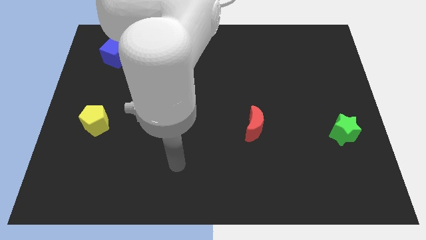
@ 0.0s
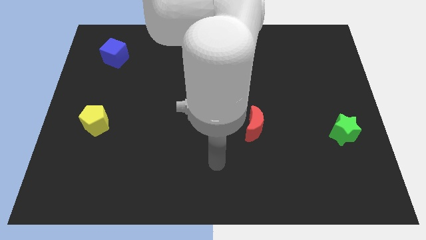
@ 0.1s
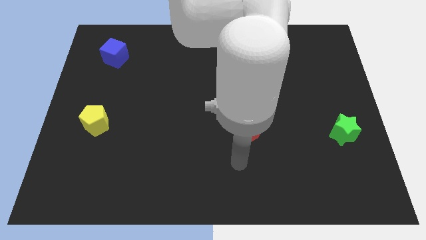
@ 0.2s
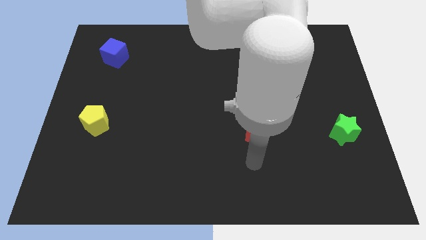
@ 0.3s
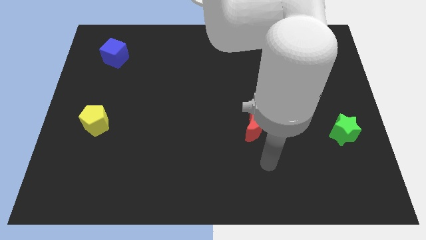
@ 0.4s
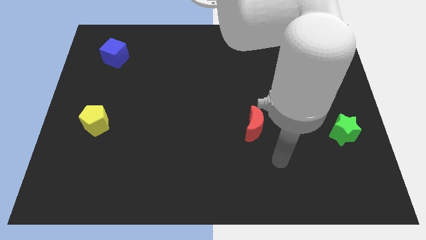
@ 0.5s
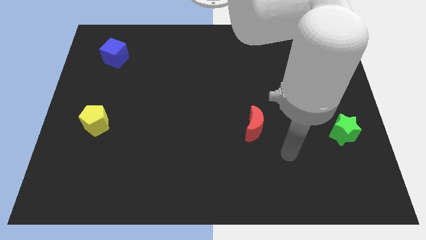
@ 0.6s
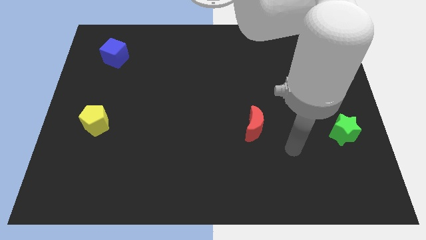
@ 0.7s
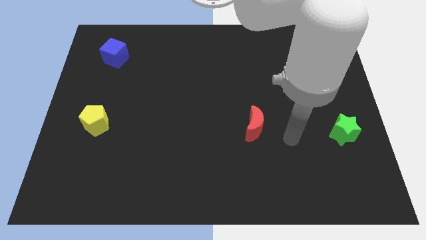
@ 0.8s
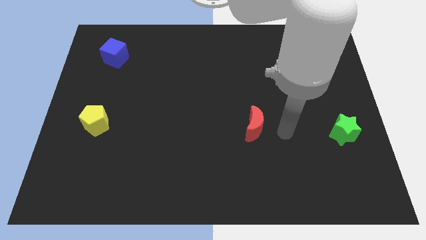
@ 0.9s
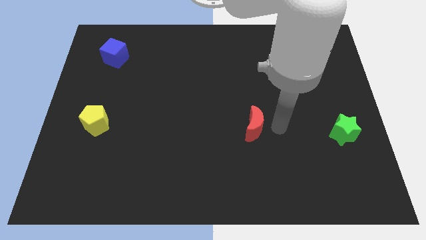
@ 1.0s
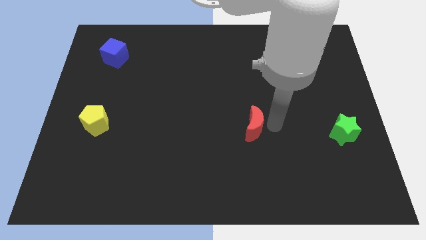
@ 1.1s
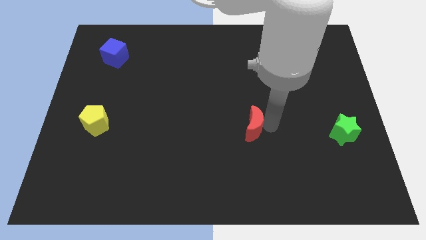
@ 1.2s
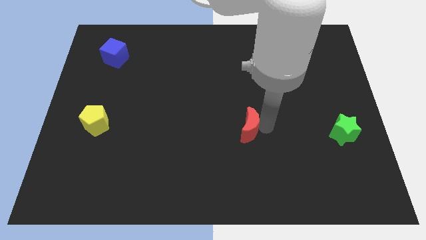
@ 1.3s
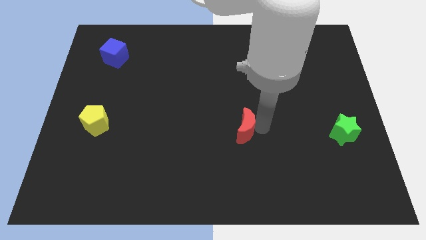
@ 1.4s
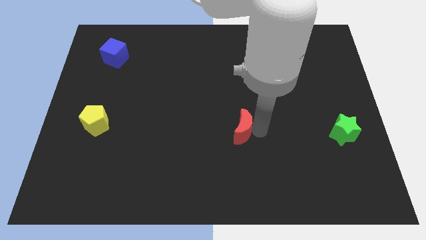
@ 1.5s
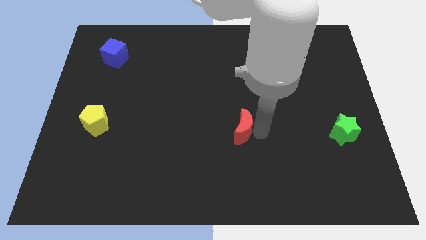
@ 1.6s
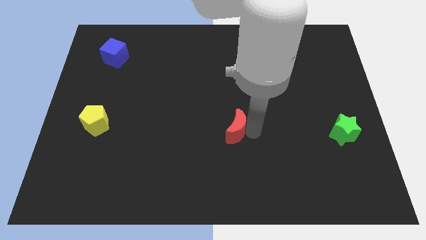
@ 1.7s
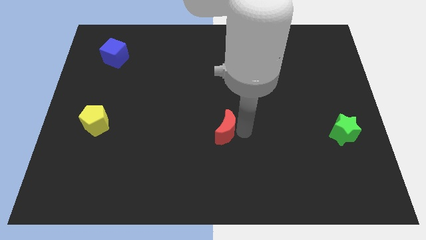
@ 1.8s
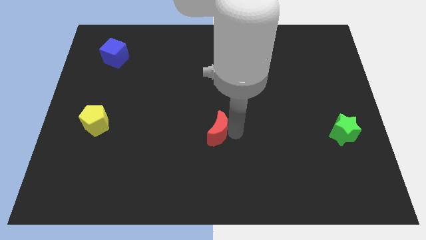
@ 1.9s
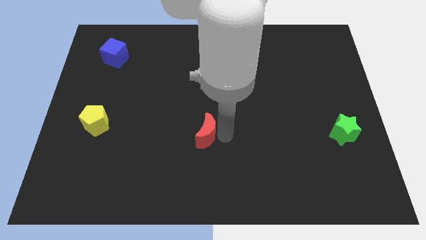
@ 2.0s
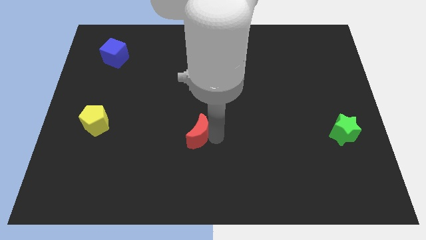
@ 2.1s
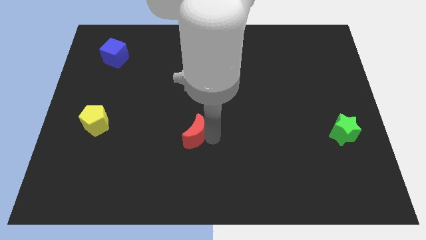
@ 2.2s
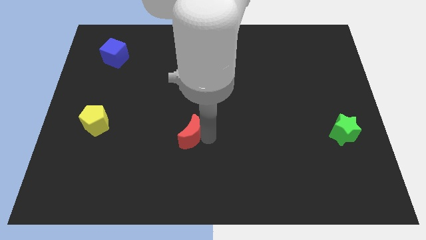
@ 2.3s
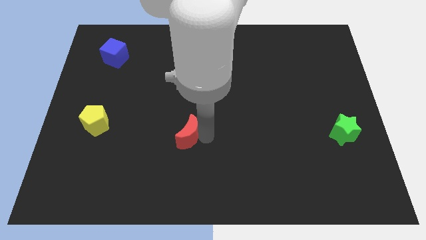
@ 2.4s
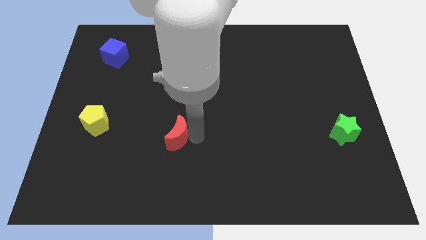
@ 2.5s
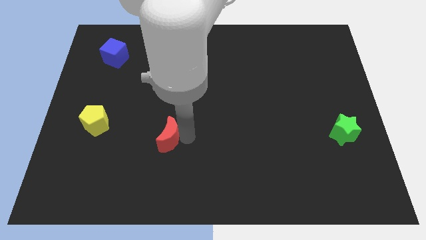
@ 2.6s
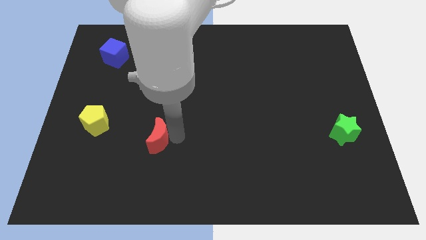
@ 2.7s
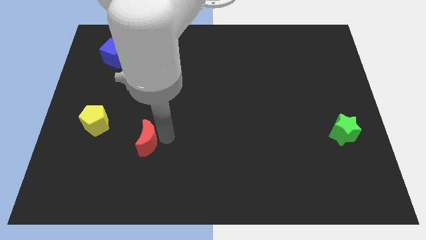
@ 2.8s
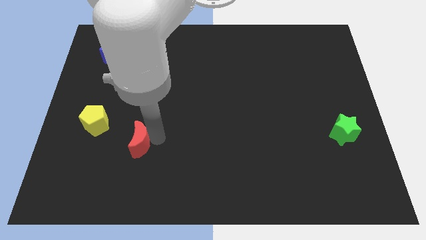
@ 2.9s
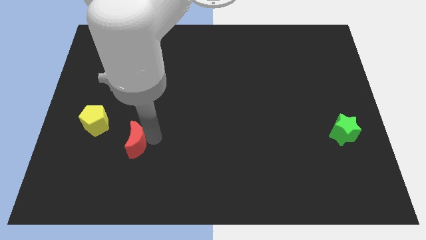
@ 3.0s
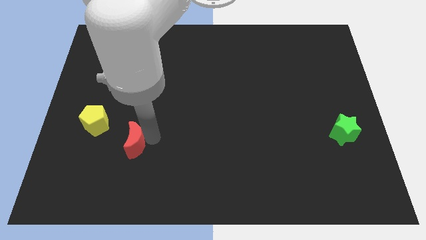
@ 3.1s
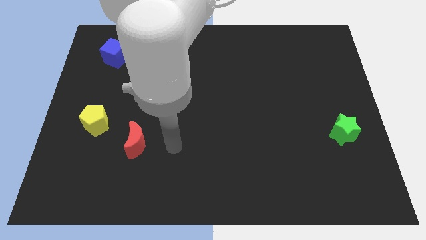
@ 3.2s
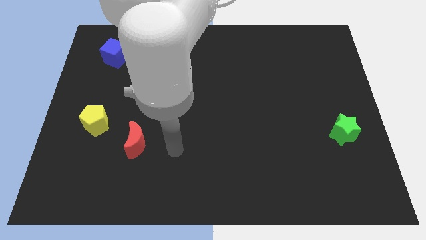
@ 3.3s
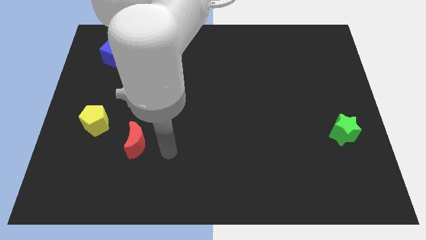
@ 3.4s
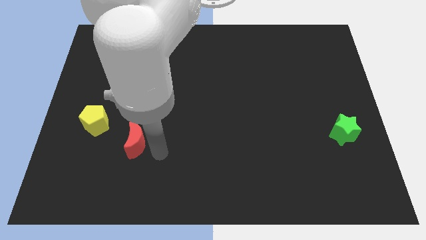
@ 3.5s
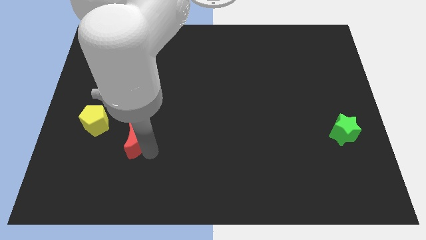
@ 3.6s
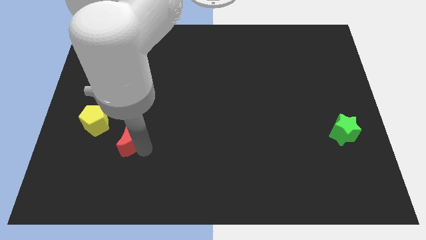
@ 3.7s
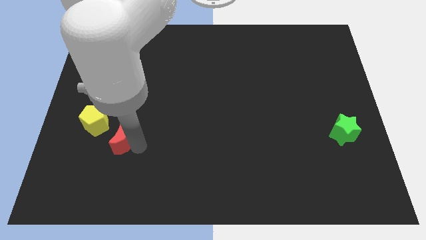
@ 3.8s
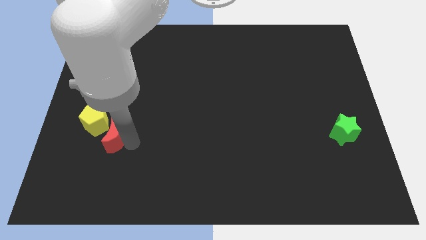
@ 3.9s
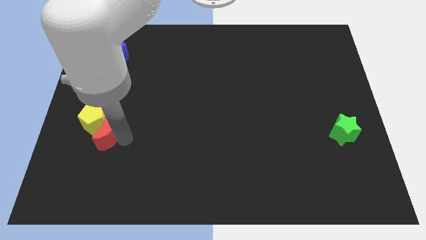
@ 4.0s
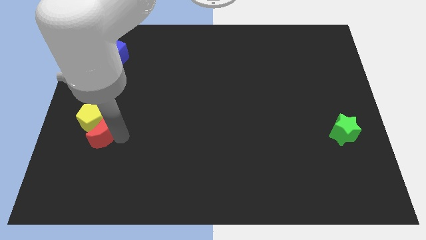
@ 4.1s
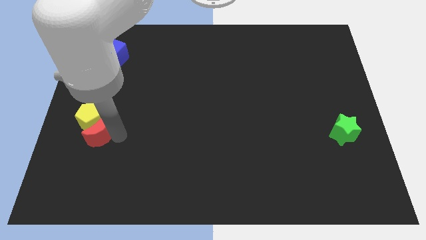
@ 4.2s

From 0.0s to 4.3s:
slide the red block towards the pentagon

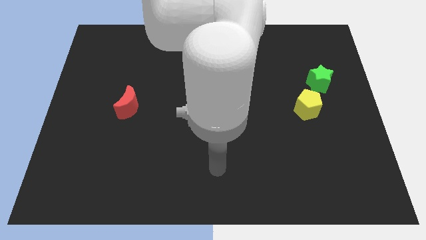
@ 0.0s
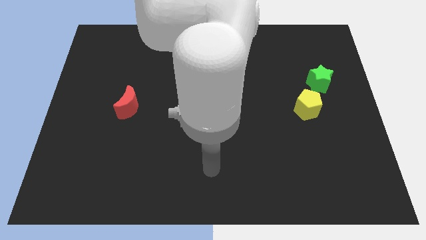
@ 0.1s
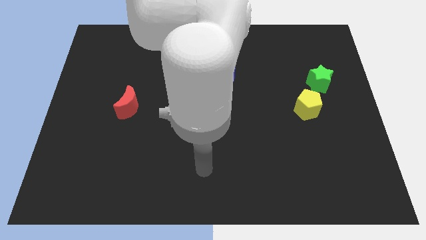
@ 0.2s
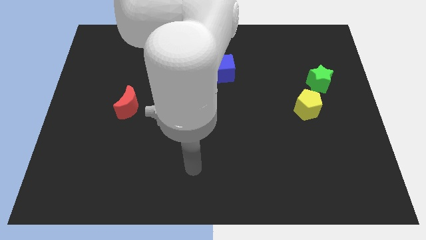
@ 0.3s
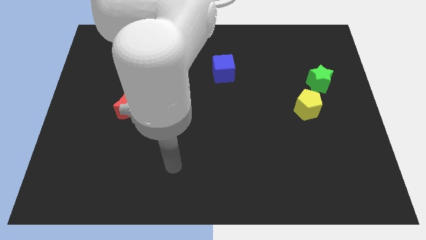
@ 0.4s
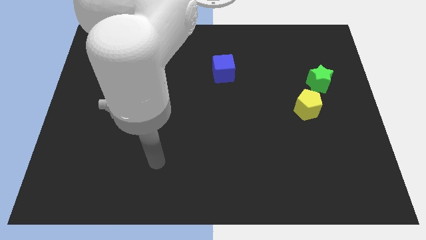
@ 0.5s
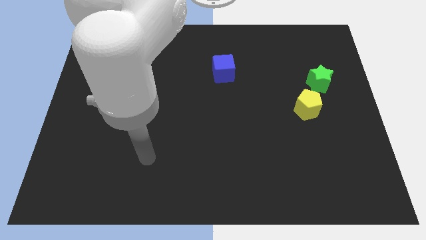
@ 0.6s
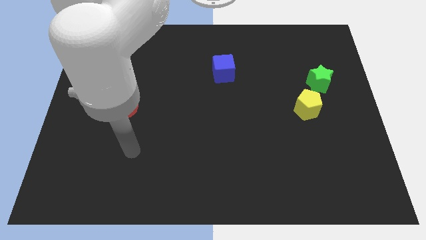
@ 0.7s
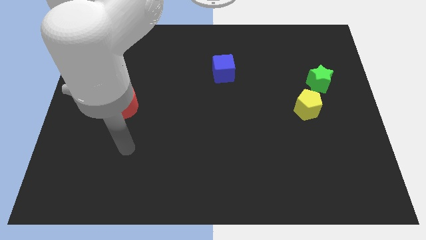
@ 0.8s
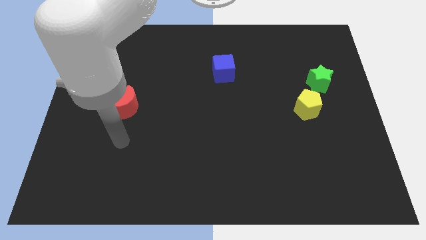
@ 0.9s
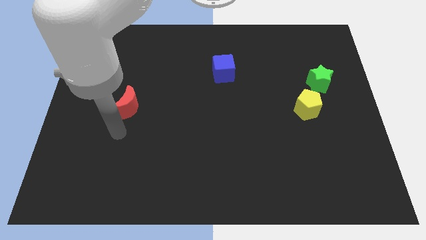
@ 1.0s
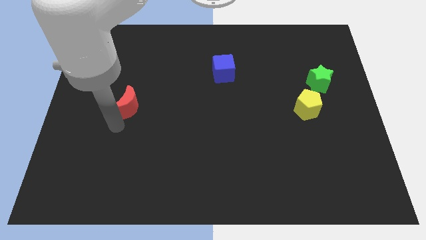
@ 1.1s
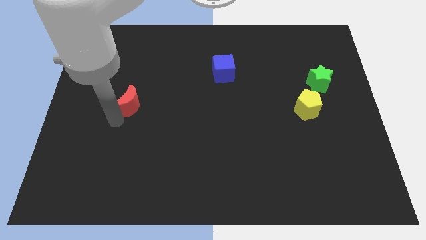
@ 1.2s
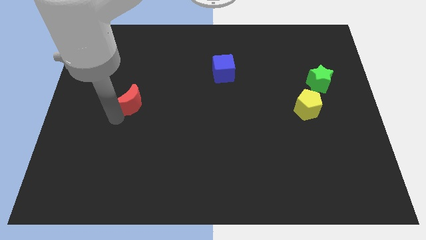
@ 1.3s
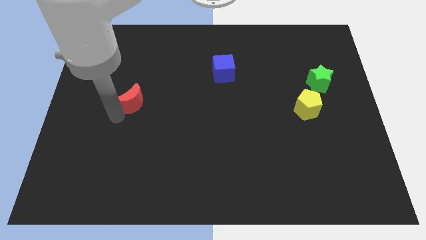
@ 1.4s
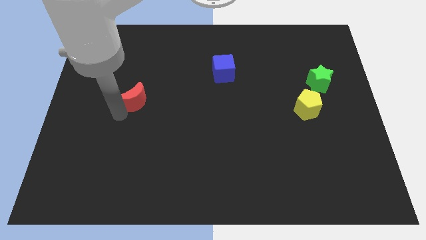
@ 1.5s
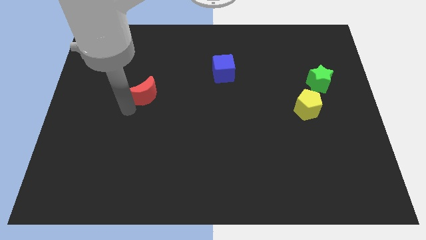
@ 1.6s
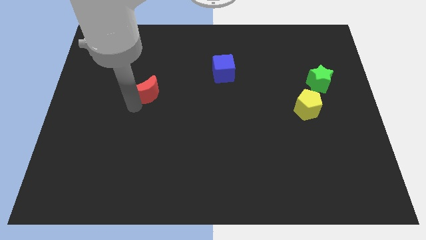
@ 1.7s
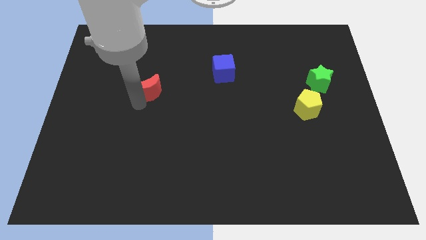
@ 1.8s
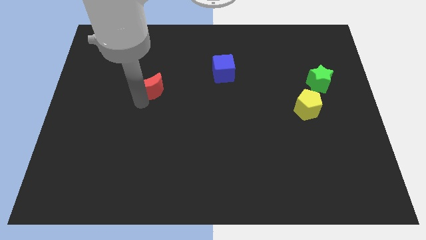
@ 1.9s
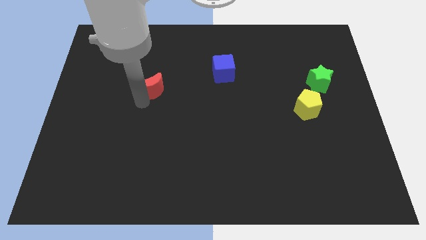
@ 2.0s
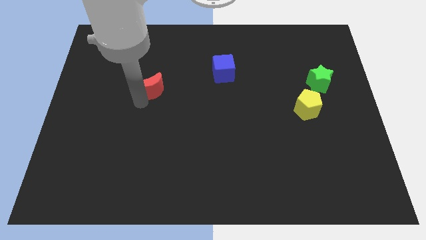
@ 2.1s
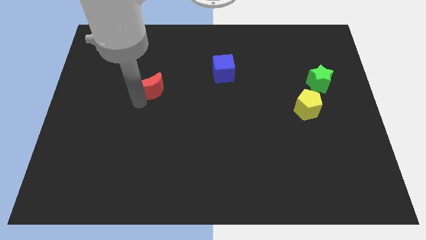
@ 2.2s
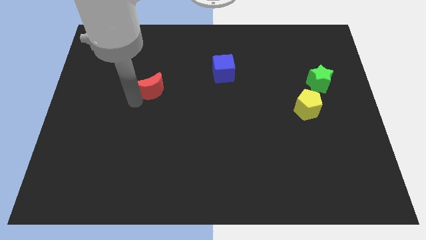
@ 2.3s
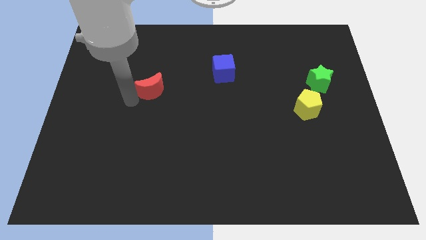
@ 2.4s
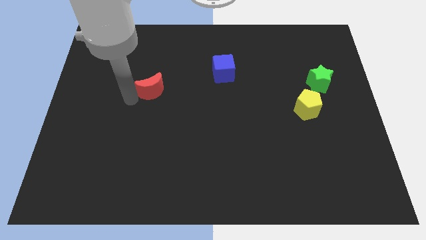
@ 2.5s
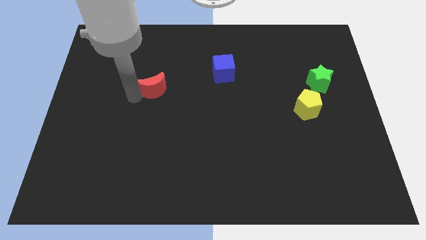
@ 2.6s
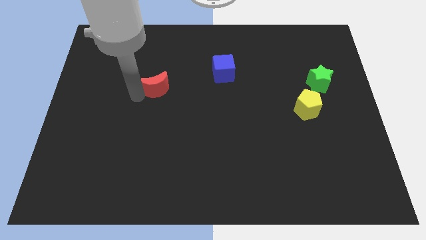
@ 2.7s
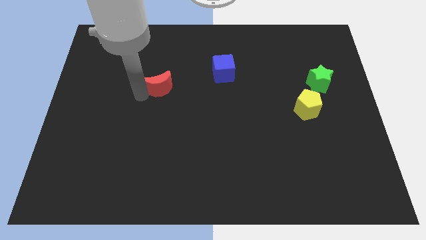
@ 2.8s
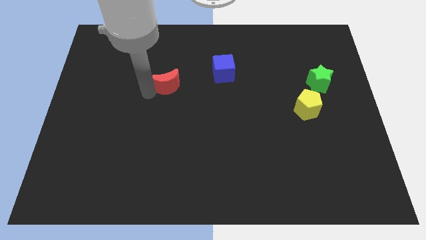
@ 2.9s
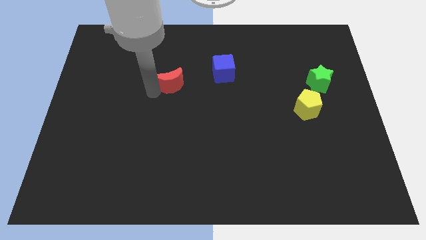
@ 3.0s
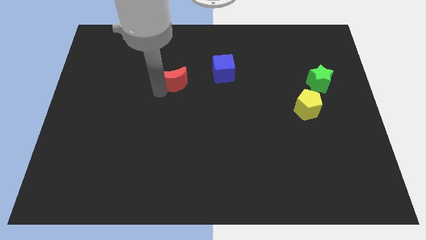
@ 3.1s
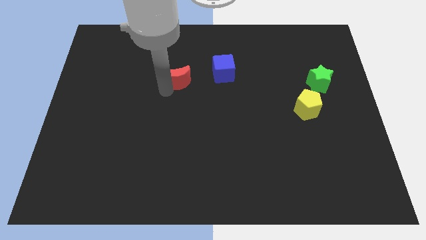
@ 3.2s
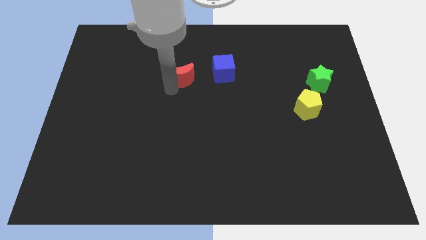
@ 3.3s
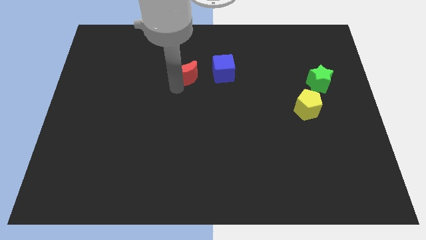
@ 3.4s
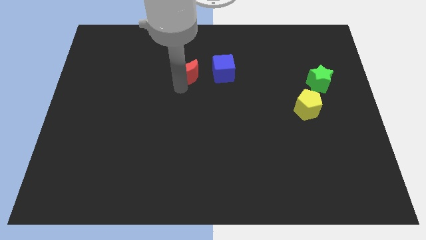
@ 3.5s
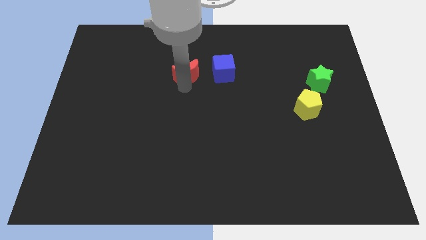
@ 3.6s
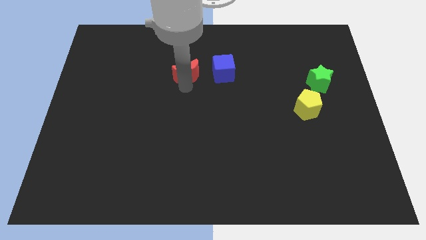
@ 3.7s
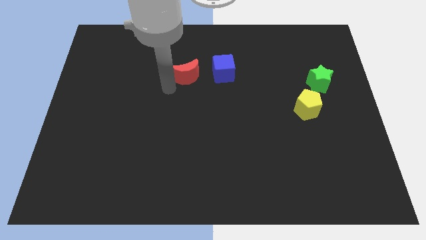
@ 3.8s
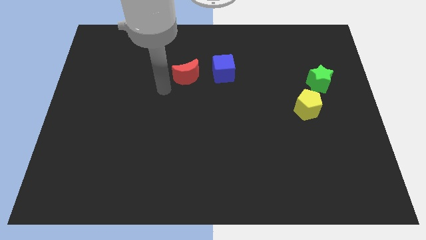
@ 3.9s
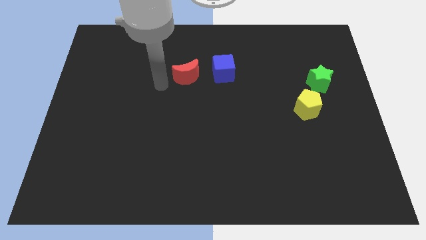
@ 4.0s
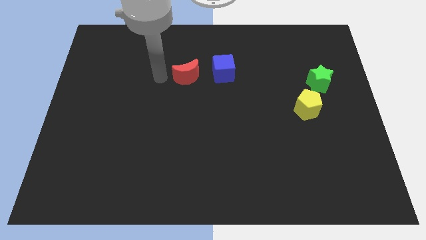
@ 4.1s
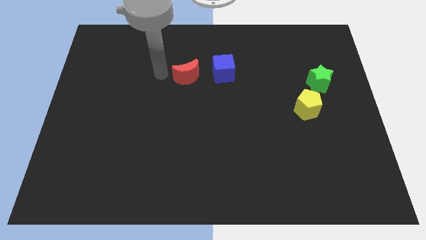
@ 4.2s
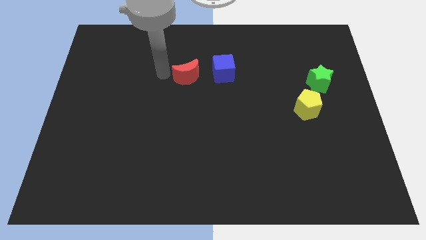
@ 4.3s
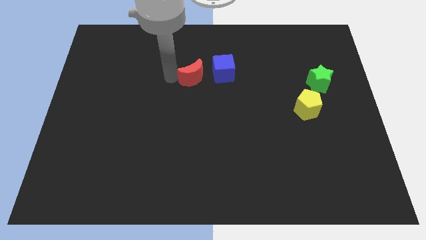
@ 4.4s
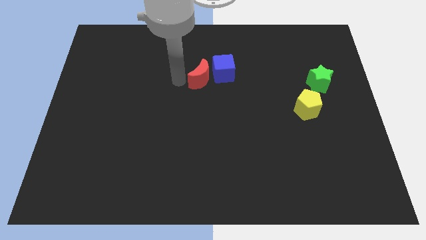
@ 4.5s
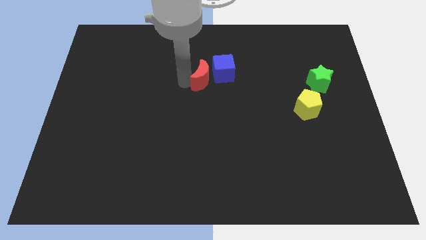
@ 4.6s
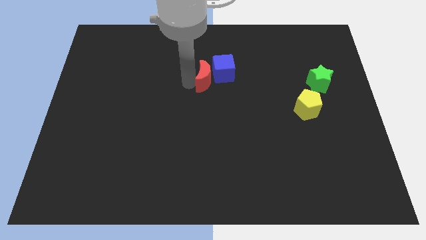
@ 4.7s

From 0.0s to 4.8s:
slide the red block next to the cube
